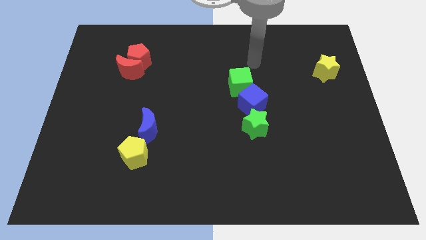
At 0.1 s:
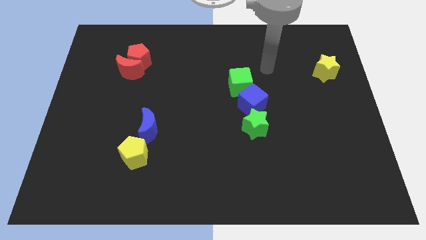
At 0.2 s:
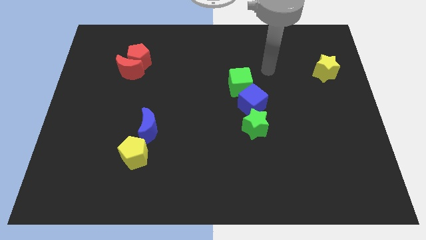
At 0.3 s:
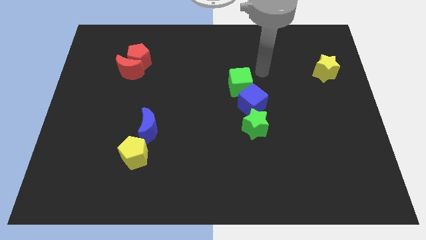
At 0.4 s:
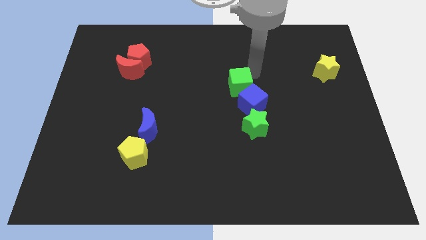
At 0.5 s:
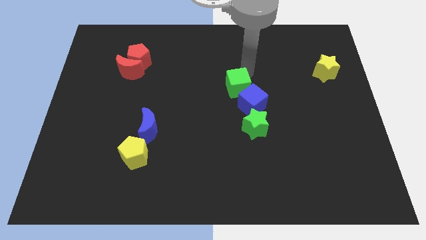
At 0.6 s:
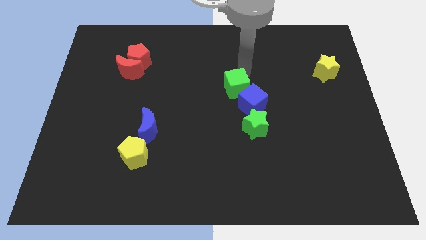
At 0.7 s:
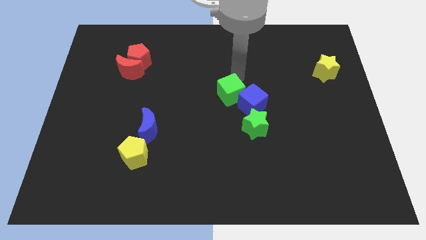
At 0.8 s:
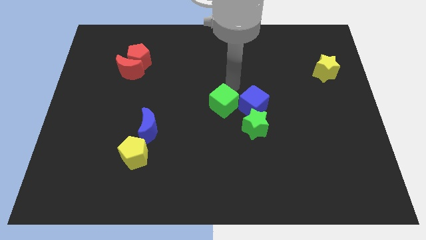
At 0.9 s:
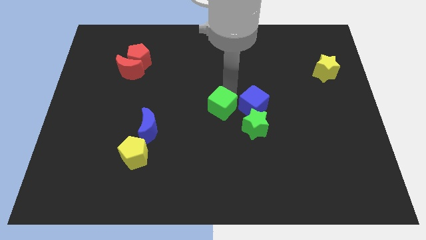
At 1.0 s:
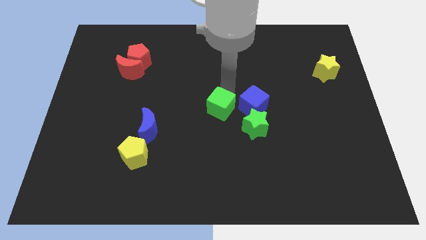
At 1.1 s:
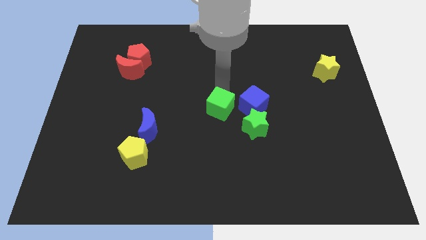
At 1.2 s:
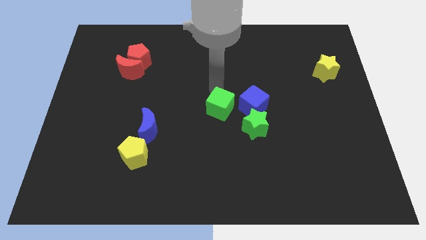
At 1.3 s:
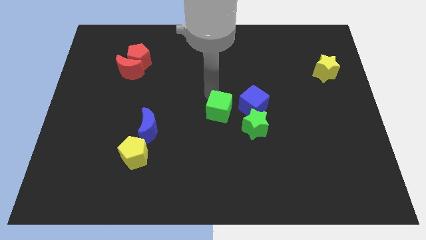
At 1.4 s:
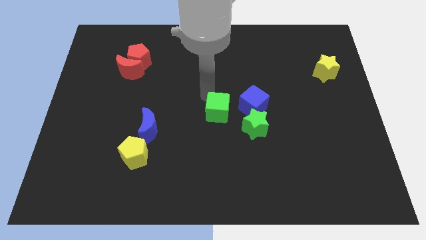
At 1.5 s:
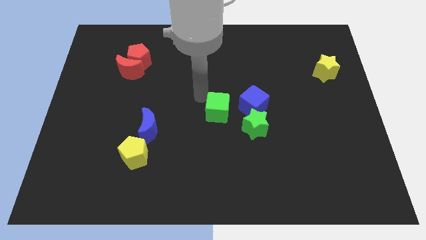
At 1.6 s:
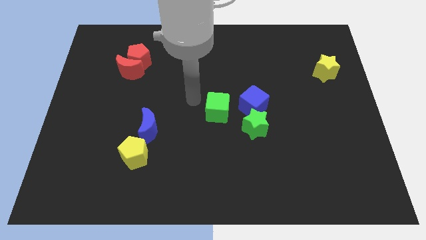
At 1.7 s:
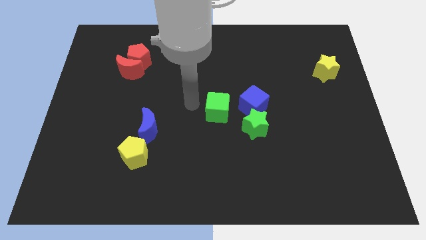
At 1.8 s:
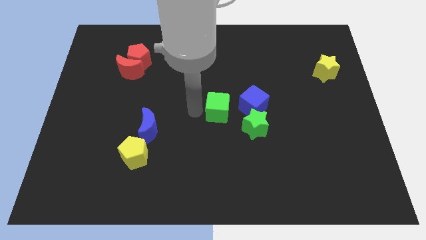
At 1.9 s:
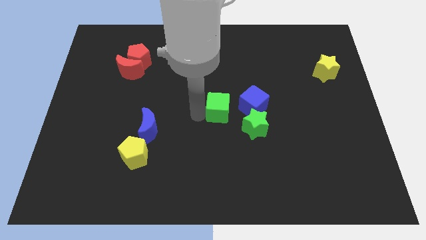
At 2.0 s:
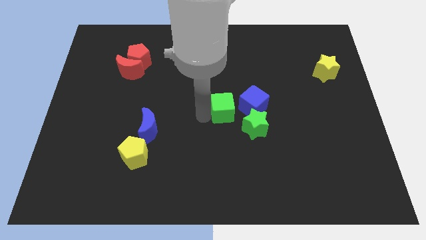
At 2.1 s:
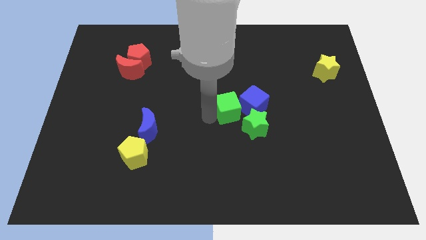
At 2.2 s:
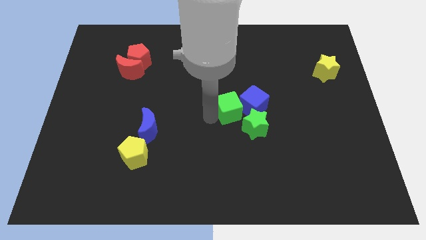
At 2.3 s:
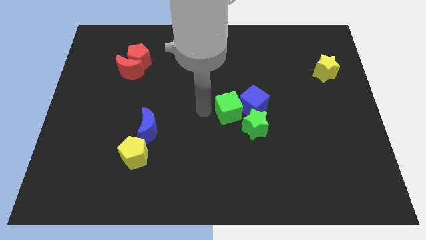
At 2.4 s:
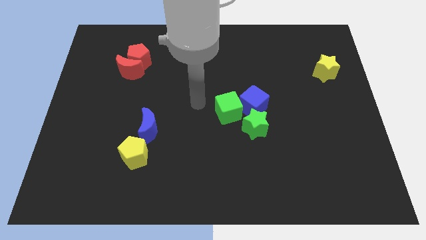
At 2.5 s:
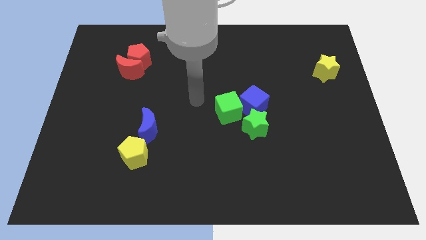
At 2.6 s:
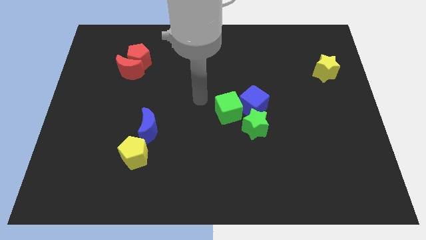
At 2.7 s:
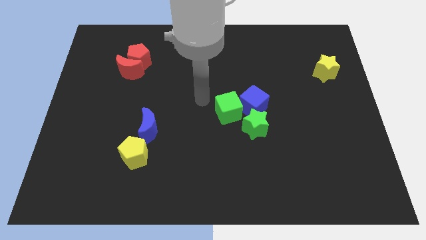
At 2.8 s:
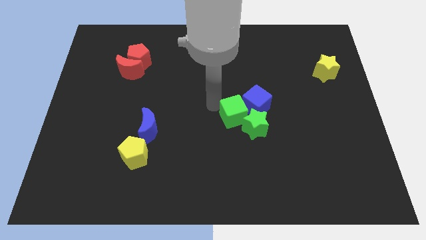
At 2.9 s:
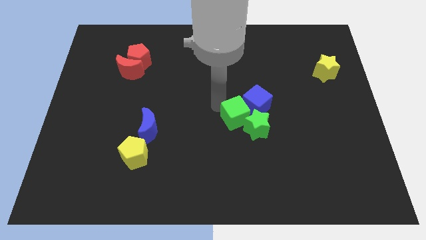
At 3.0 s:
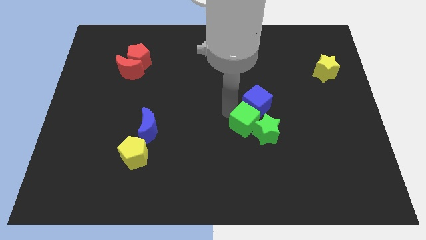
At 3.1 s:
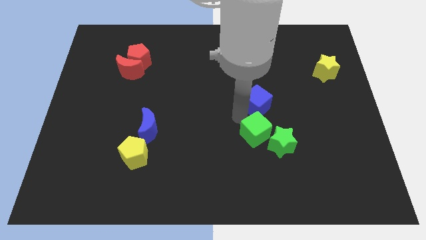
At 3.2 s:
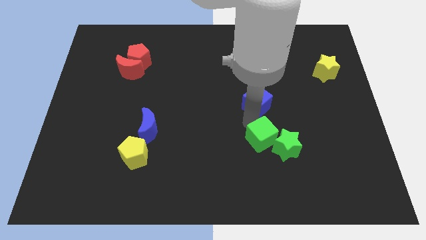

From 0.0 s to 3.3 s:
push the green cube into the green star

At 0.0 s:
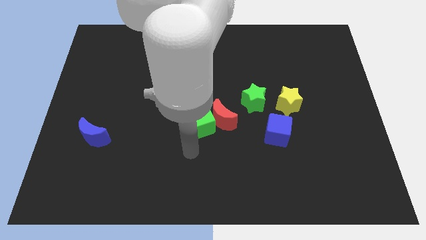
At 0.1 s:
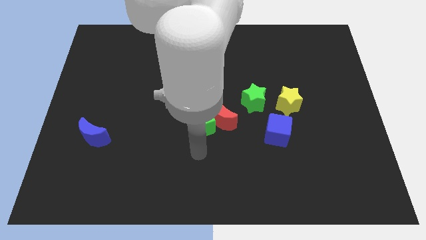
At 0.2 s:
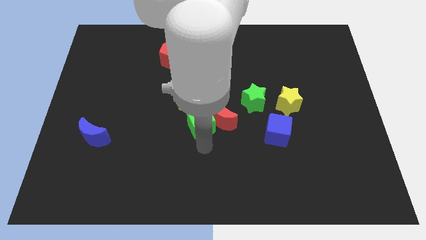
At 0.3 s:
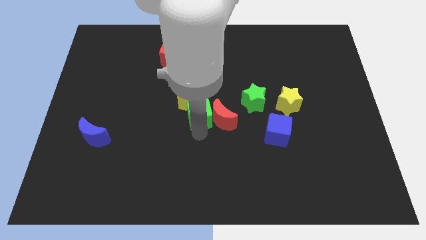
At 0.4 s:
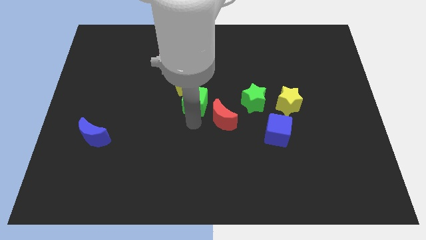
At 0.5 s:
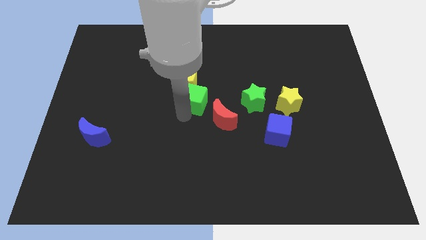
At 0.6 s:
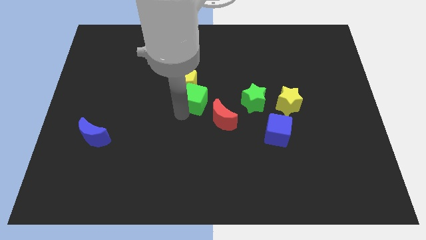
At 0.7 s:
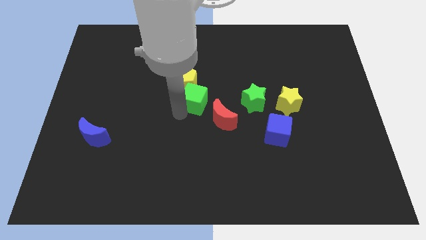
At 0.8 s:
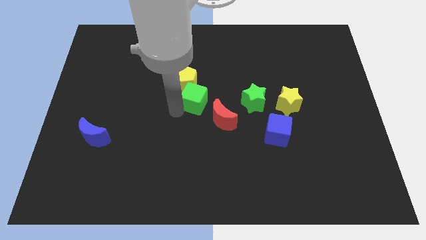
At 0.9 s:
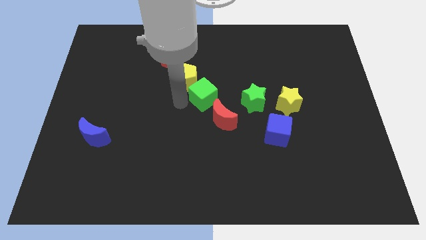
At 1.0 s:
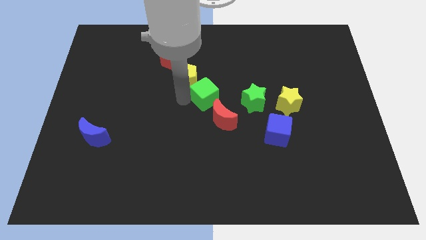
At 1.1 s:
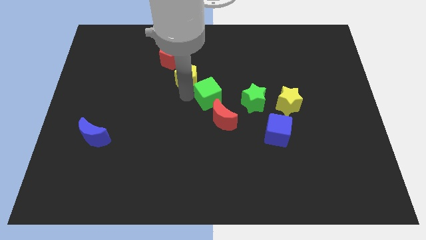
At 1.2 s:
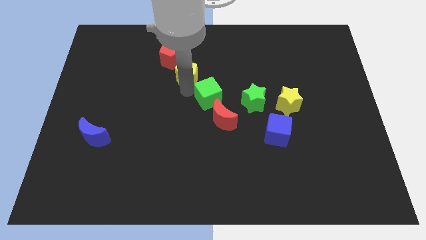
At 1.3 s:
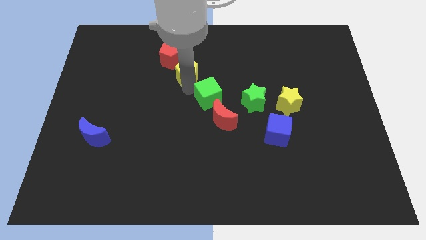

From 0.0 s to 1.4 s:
move the green cube above the red moon

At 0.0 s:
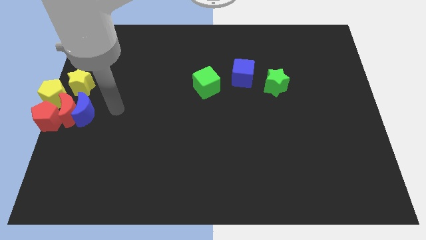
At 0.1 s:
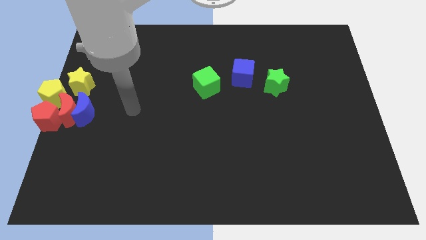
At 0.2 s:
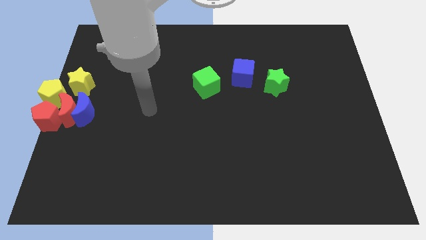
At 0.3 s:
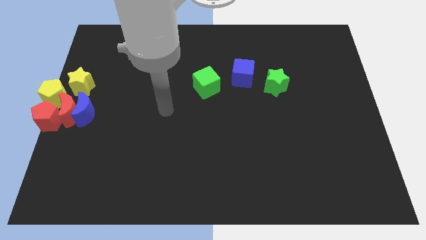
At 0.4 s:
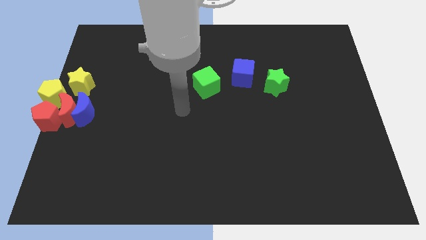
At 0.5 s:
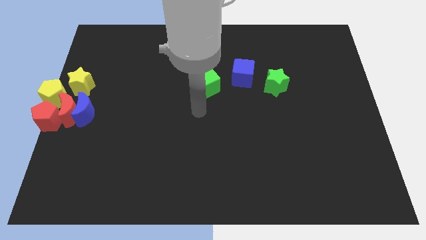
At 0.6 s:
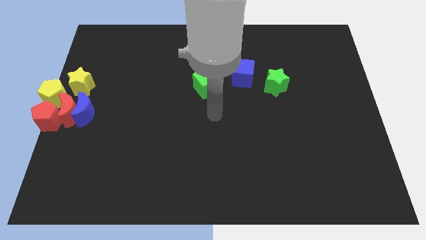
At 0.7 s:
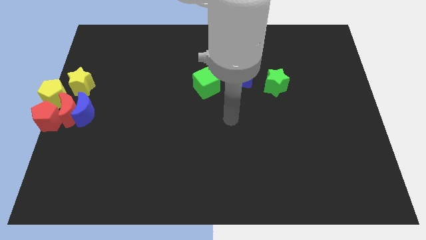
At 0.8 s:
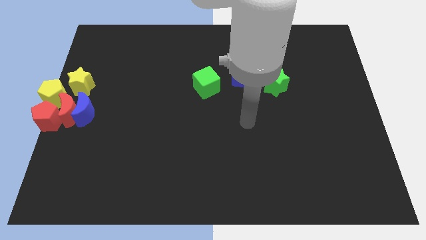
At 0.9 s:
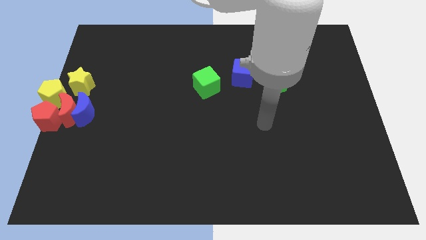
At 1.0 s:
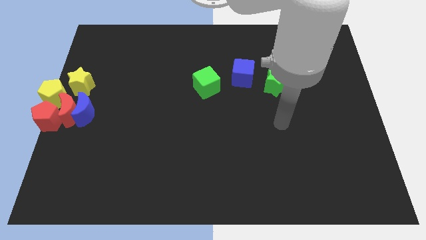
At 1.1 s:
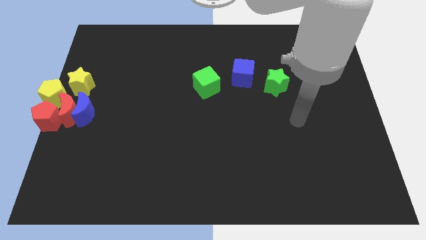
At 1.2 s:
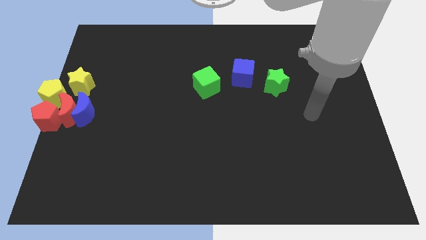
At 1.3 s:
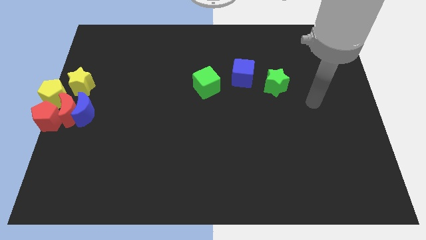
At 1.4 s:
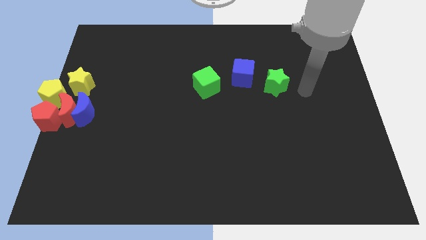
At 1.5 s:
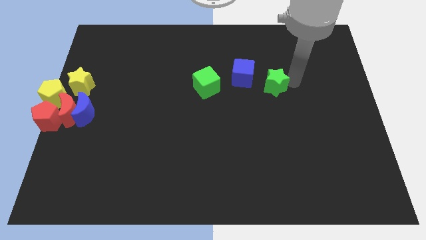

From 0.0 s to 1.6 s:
point your arm to the right side of green star

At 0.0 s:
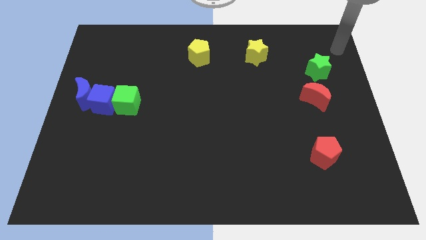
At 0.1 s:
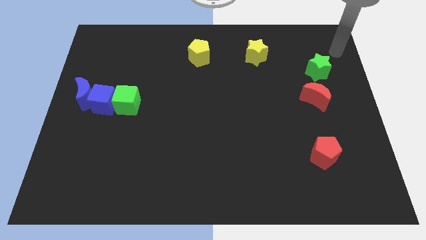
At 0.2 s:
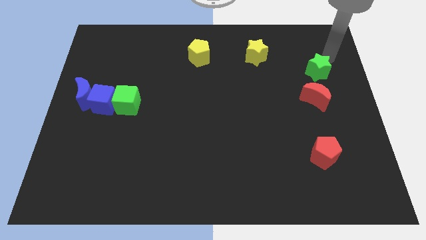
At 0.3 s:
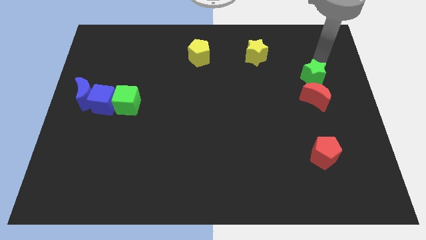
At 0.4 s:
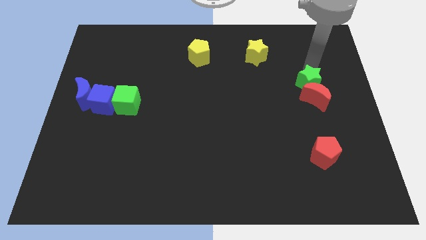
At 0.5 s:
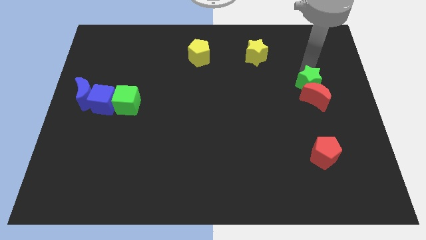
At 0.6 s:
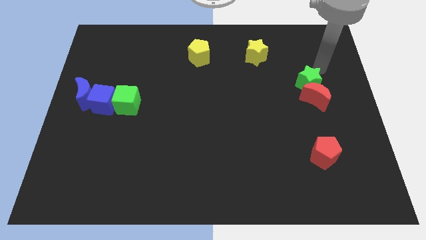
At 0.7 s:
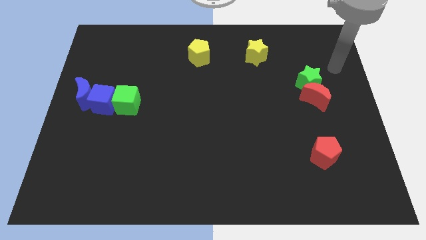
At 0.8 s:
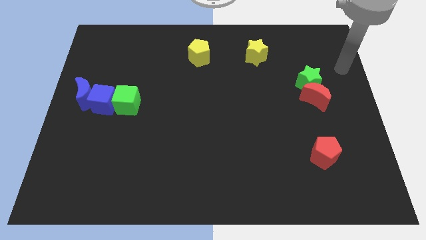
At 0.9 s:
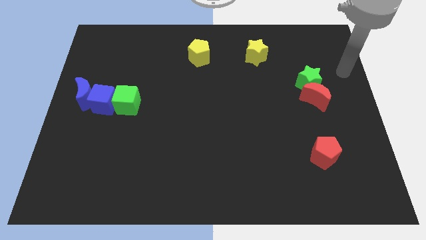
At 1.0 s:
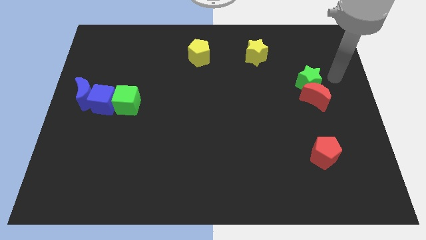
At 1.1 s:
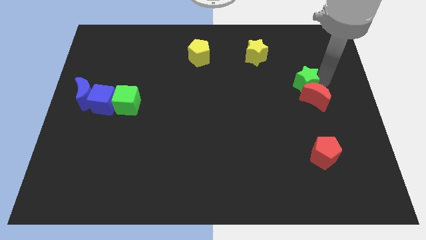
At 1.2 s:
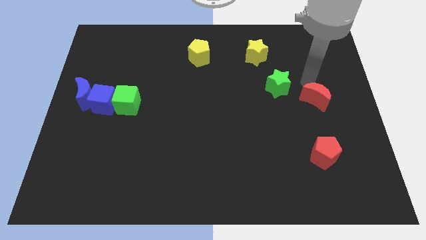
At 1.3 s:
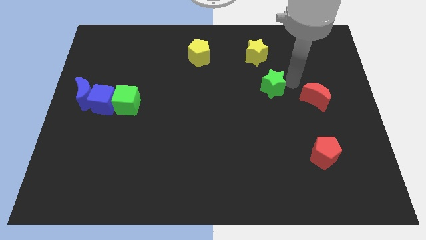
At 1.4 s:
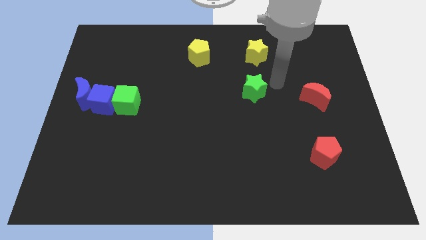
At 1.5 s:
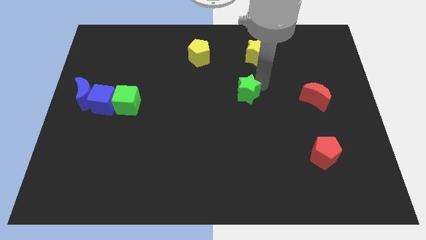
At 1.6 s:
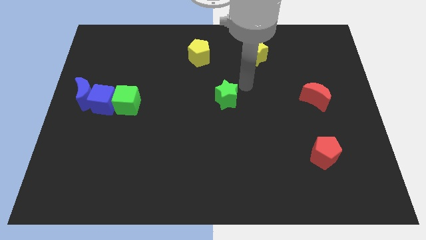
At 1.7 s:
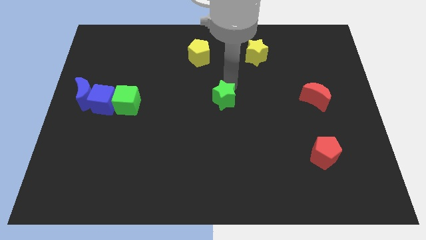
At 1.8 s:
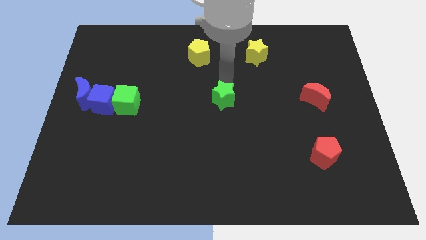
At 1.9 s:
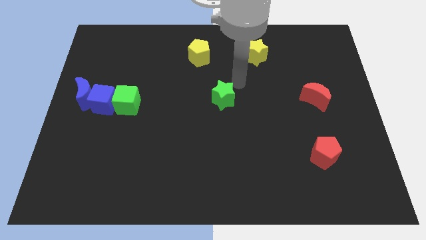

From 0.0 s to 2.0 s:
move green star to the centre of the board

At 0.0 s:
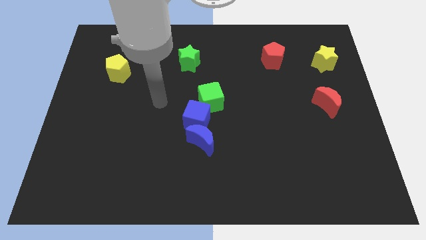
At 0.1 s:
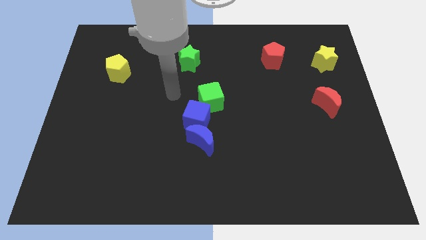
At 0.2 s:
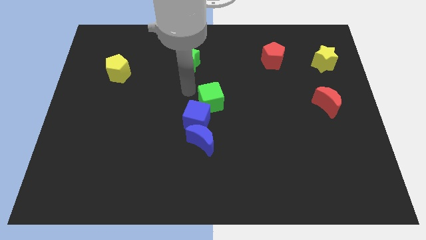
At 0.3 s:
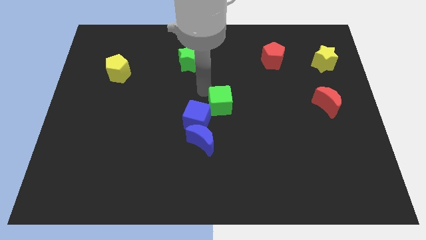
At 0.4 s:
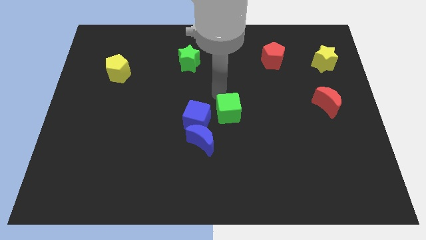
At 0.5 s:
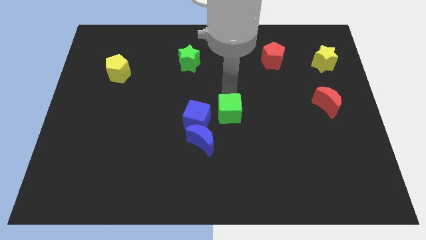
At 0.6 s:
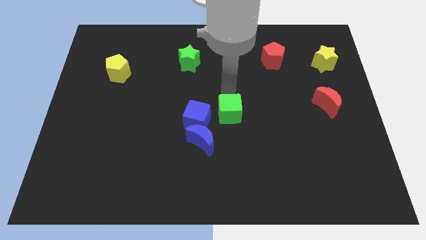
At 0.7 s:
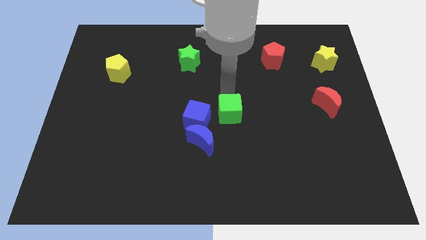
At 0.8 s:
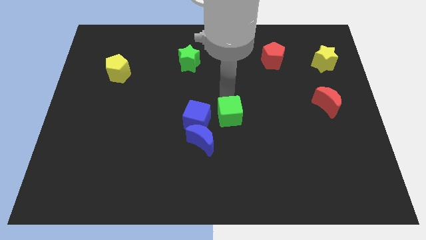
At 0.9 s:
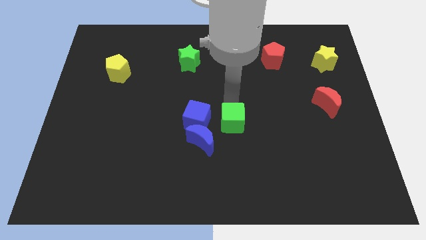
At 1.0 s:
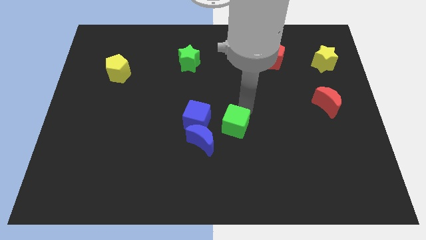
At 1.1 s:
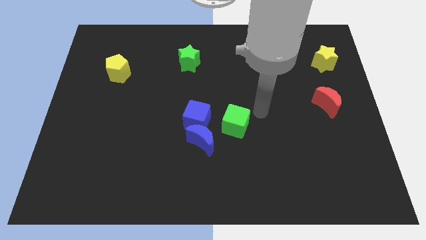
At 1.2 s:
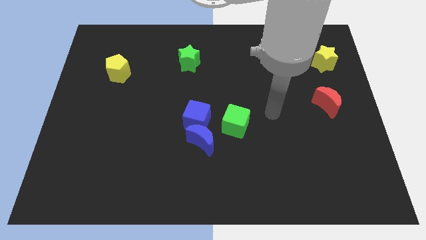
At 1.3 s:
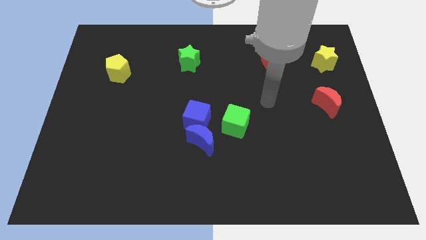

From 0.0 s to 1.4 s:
separate the green cube from blue cube
